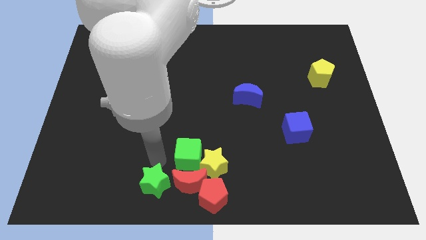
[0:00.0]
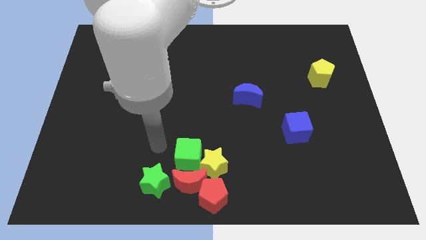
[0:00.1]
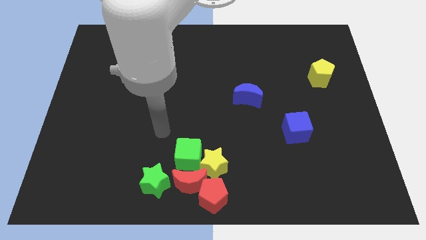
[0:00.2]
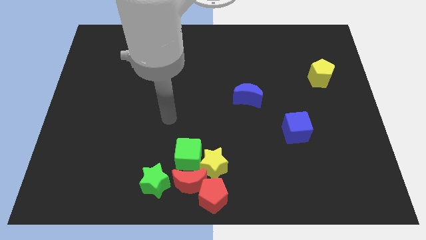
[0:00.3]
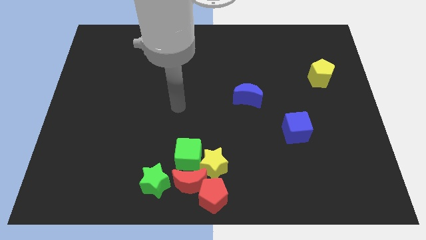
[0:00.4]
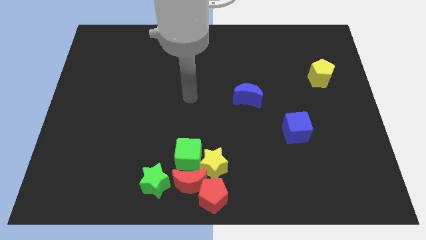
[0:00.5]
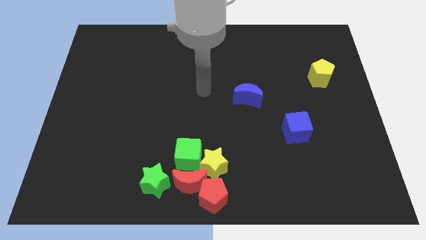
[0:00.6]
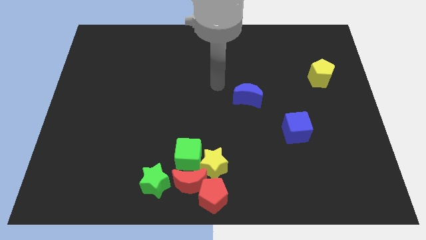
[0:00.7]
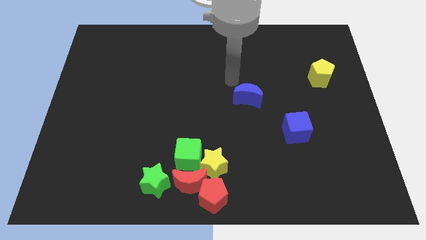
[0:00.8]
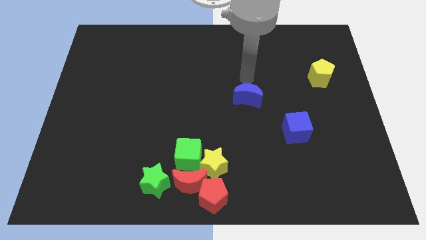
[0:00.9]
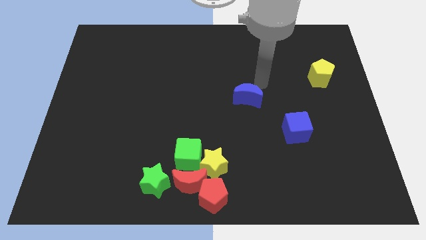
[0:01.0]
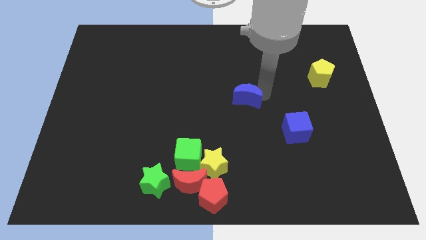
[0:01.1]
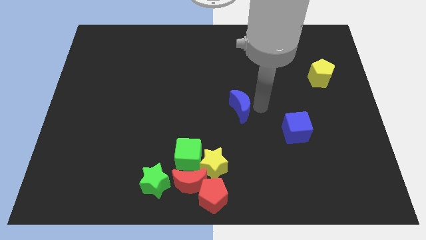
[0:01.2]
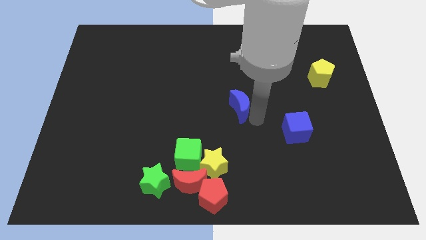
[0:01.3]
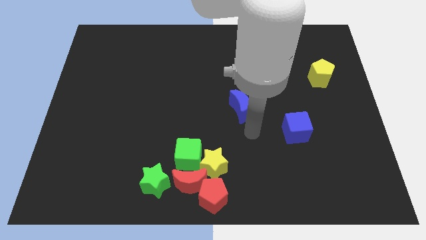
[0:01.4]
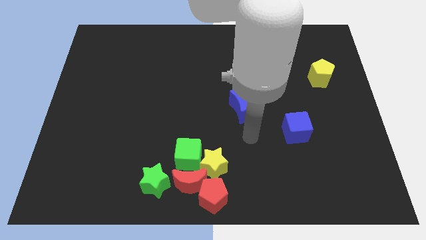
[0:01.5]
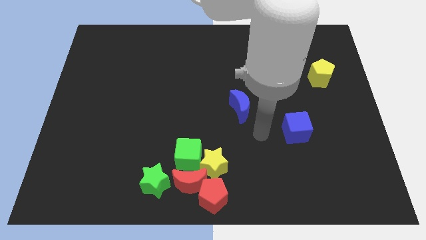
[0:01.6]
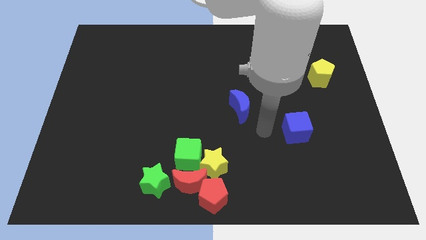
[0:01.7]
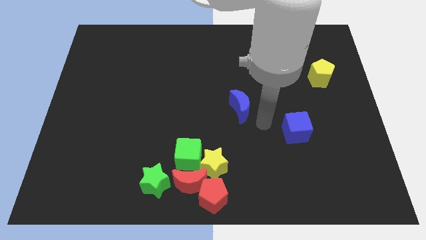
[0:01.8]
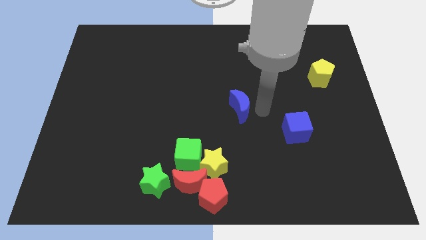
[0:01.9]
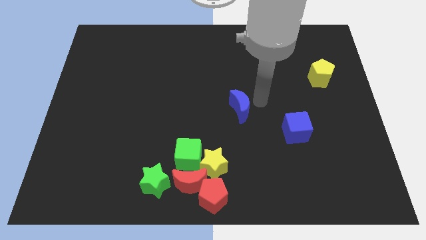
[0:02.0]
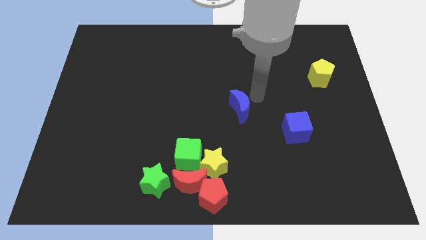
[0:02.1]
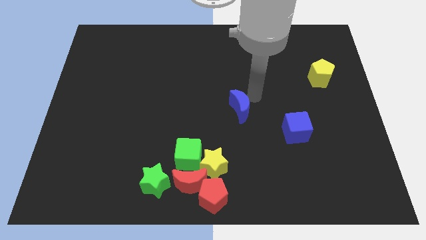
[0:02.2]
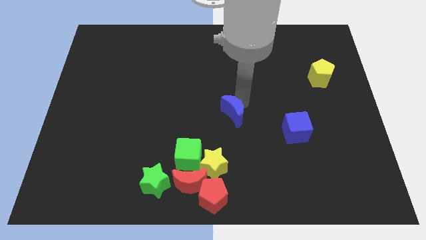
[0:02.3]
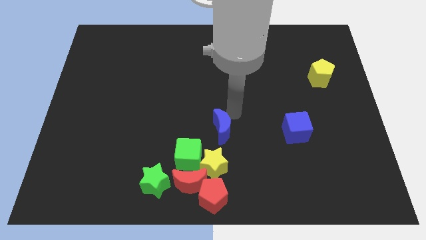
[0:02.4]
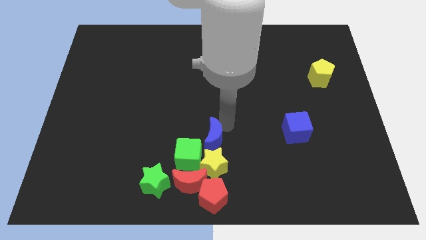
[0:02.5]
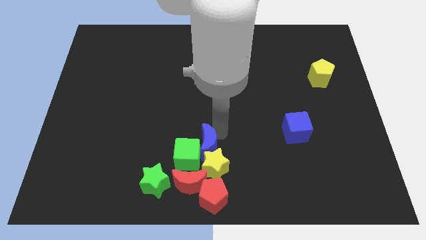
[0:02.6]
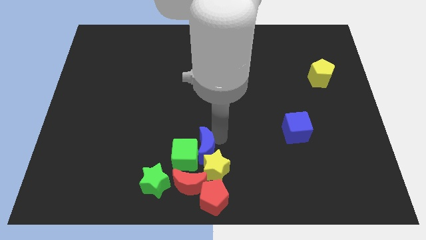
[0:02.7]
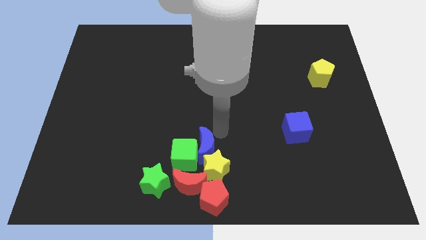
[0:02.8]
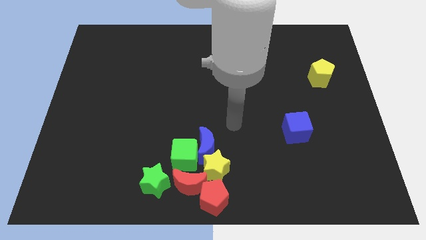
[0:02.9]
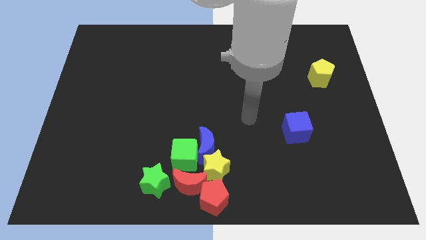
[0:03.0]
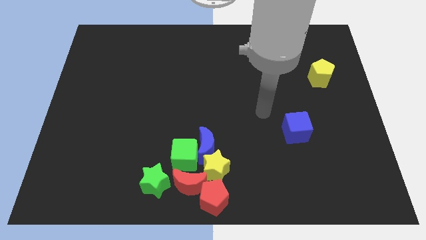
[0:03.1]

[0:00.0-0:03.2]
move the blue crescent into the right of the green cube

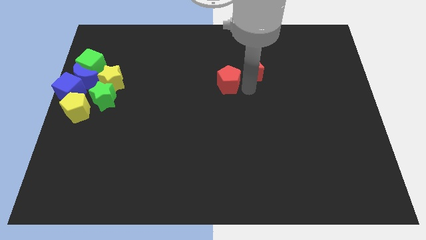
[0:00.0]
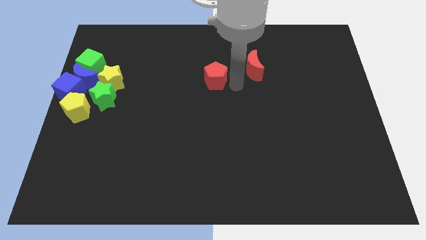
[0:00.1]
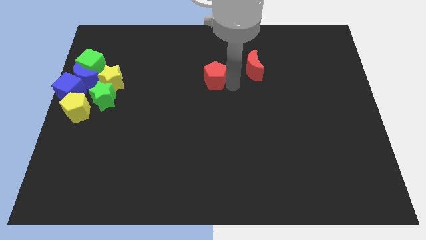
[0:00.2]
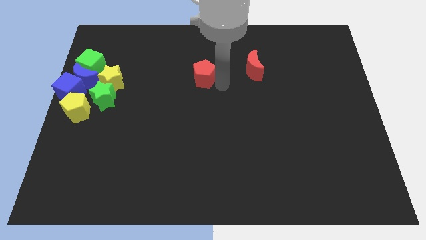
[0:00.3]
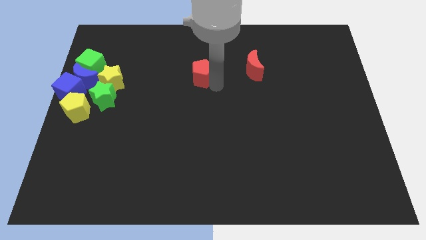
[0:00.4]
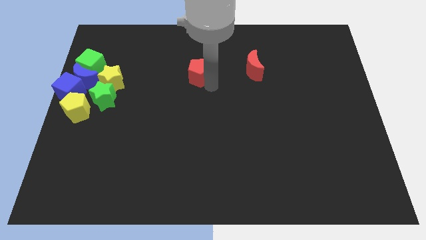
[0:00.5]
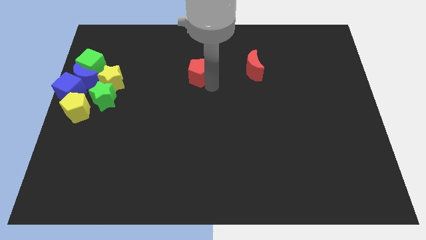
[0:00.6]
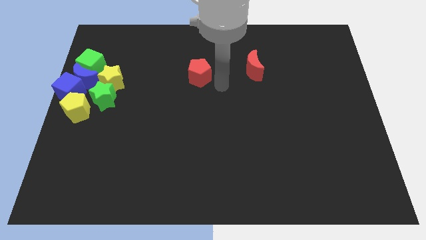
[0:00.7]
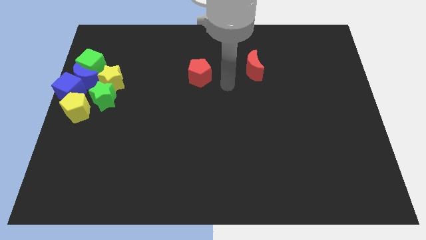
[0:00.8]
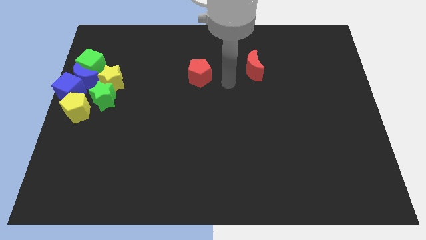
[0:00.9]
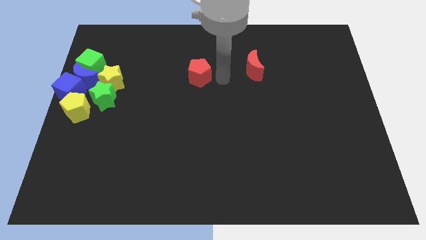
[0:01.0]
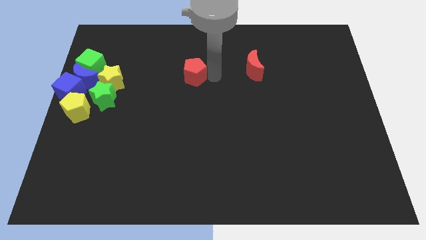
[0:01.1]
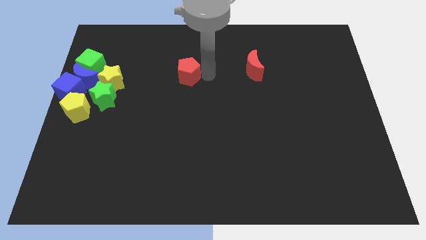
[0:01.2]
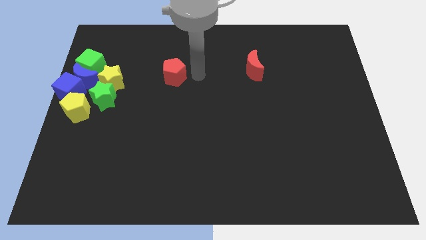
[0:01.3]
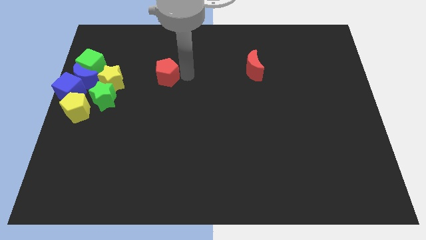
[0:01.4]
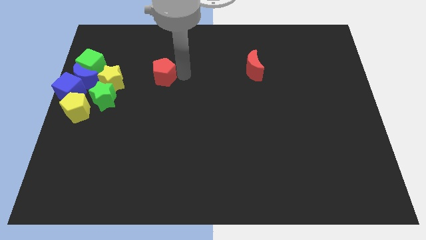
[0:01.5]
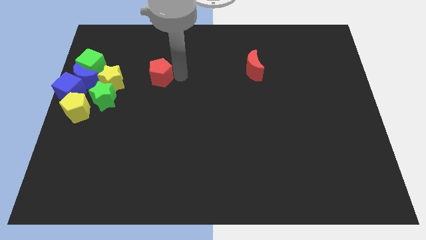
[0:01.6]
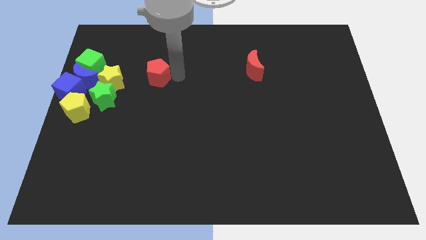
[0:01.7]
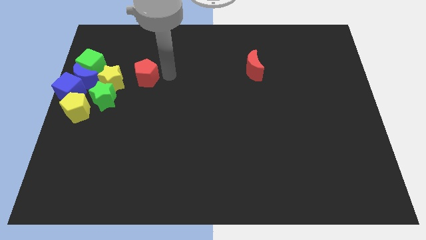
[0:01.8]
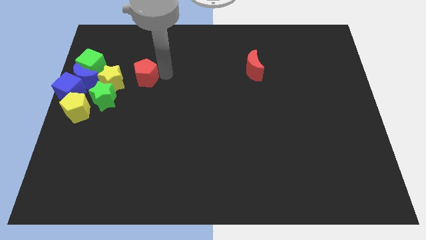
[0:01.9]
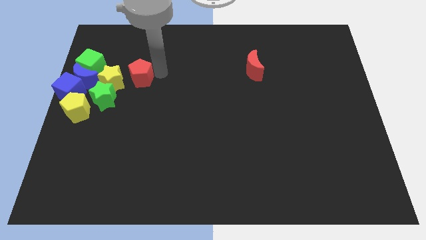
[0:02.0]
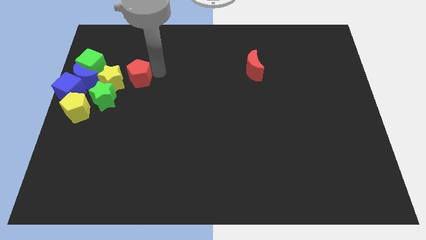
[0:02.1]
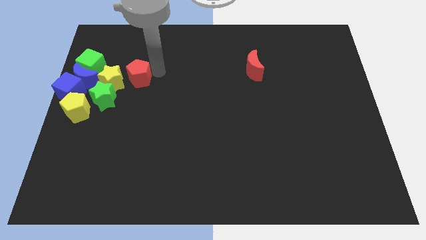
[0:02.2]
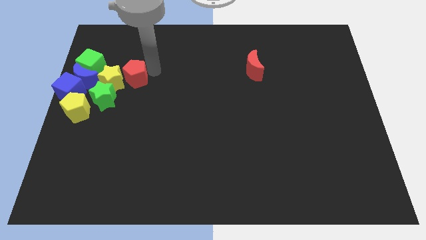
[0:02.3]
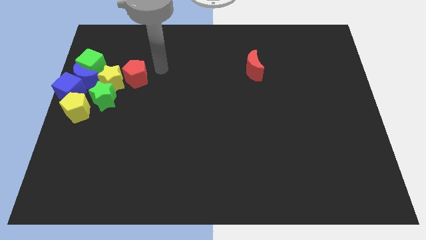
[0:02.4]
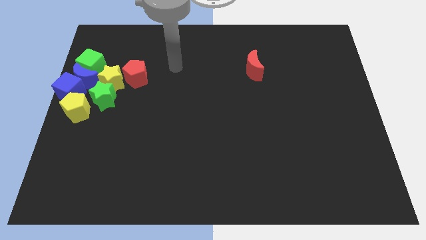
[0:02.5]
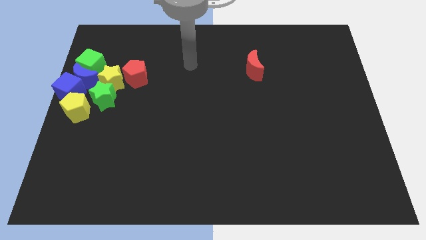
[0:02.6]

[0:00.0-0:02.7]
place the red pentagon right to the yellow star

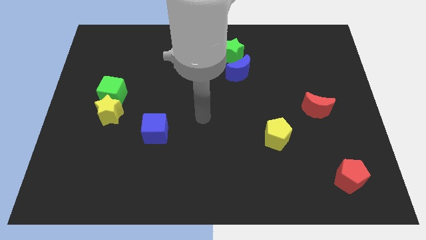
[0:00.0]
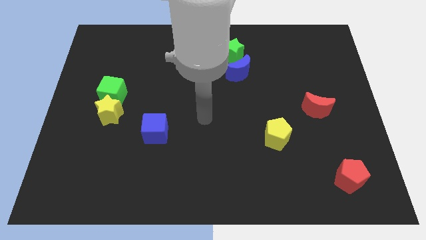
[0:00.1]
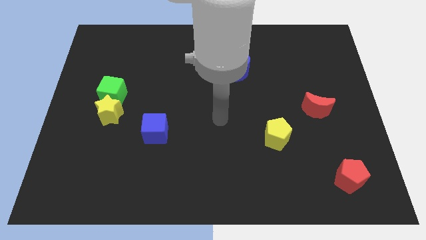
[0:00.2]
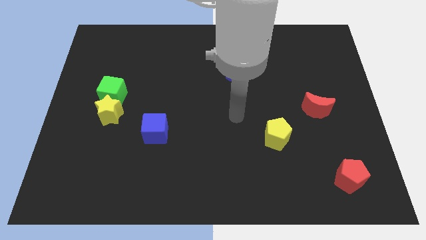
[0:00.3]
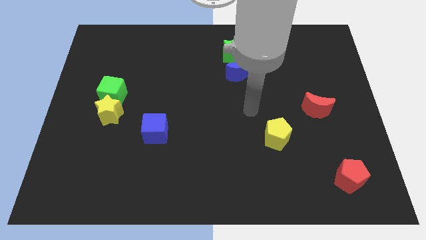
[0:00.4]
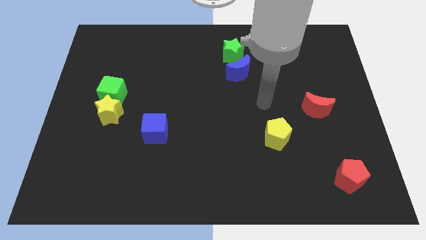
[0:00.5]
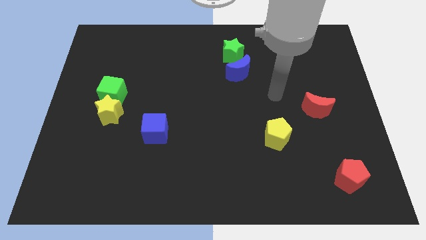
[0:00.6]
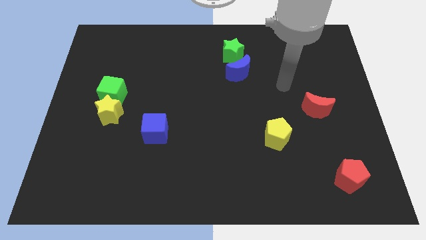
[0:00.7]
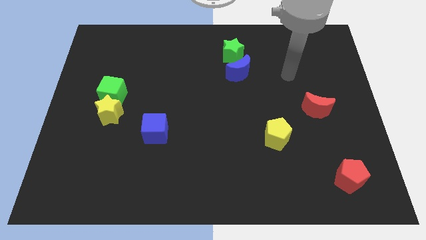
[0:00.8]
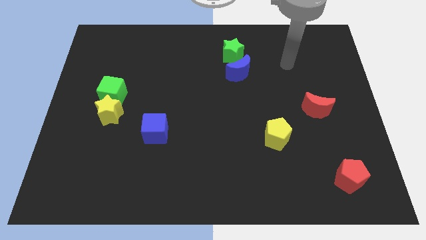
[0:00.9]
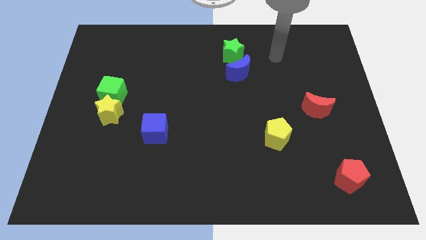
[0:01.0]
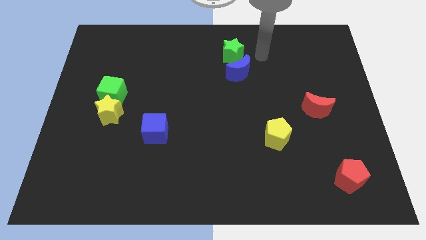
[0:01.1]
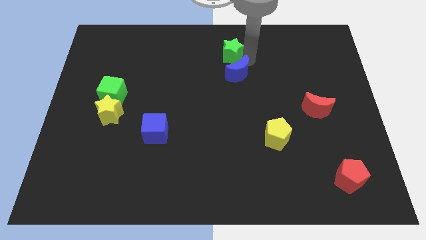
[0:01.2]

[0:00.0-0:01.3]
move your arm close to the blue moon

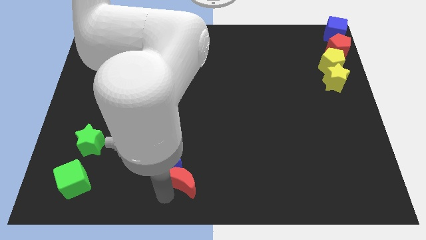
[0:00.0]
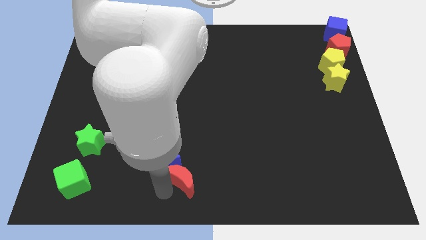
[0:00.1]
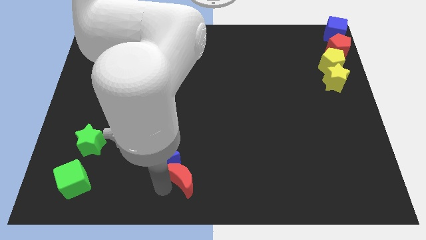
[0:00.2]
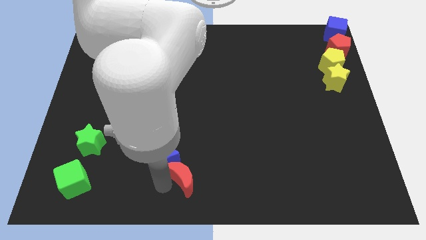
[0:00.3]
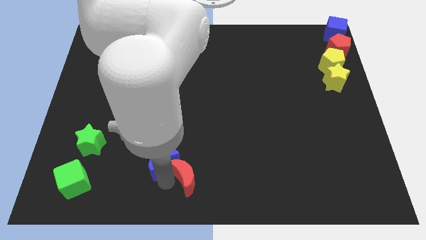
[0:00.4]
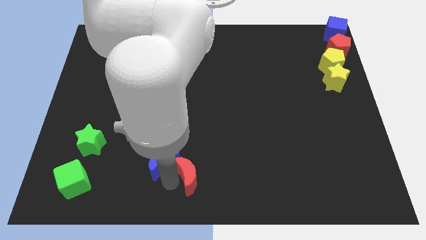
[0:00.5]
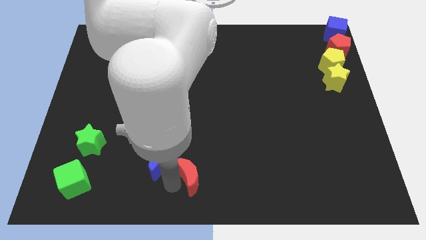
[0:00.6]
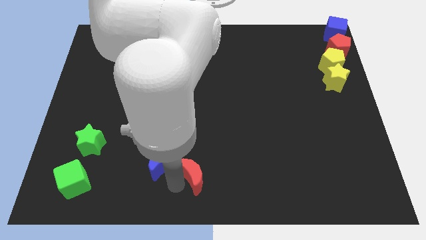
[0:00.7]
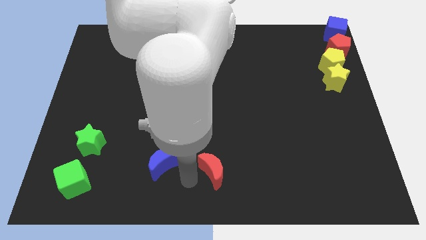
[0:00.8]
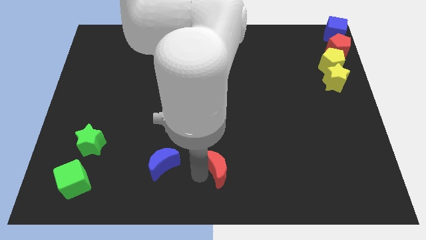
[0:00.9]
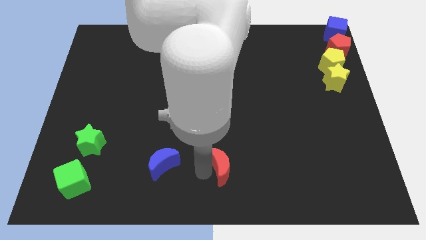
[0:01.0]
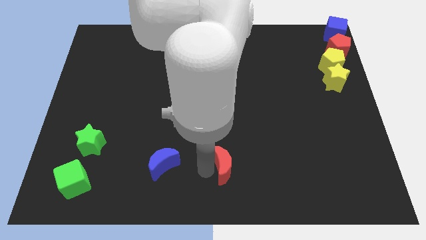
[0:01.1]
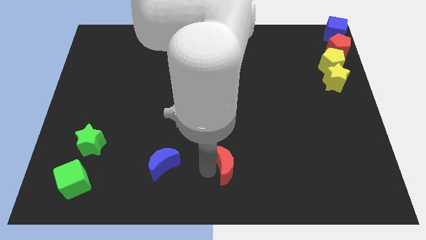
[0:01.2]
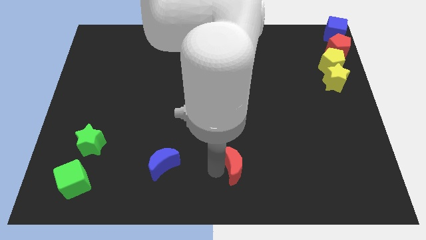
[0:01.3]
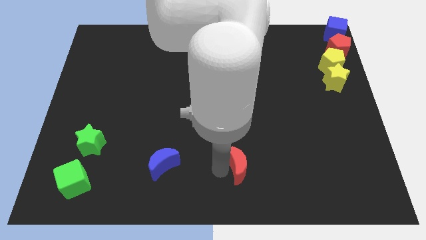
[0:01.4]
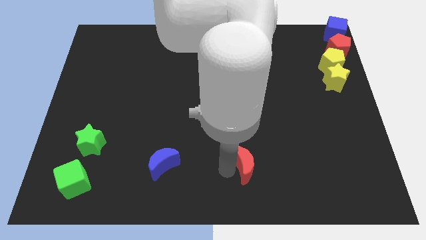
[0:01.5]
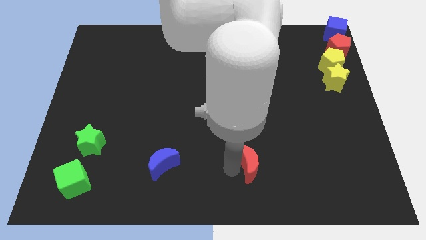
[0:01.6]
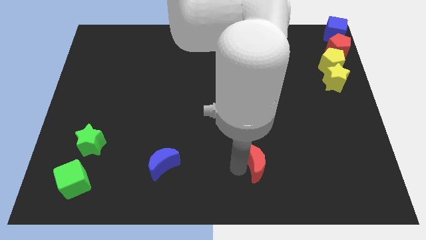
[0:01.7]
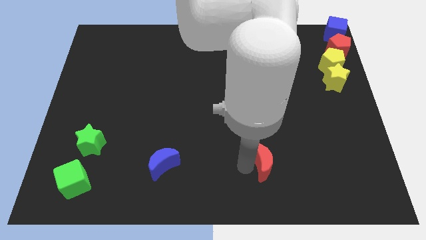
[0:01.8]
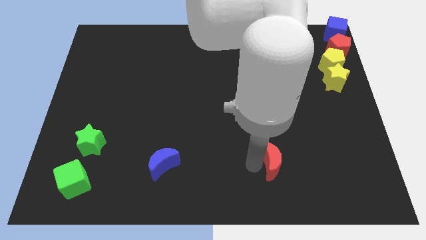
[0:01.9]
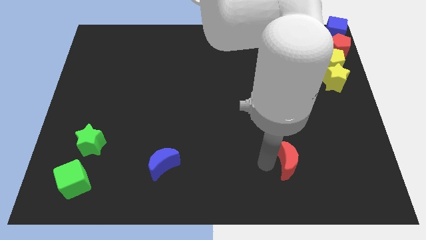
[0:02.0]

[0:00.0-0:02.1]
slide red moon horizontal to blue moon
